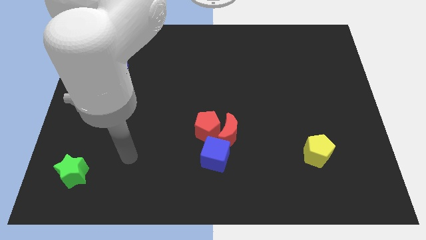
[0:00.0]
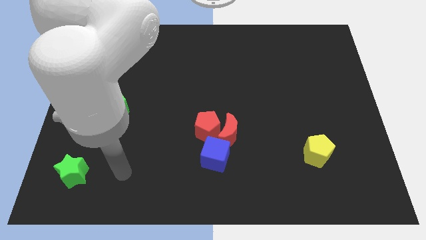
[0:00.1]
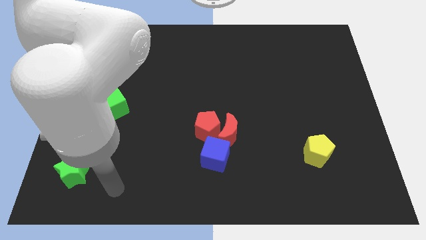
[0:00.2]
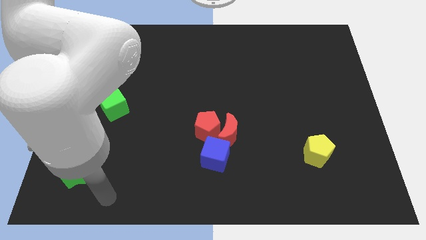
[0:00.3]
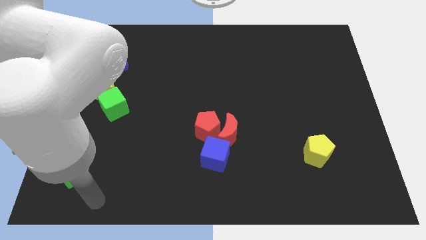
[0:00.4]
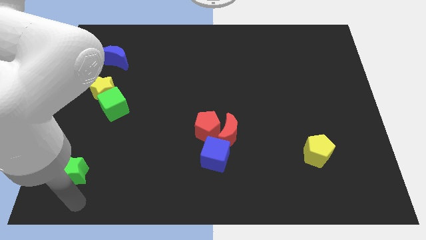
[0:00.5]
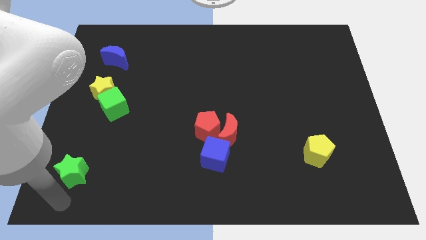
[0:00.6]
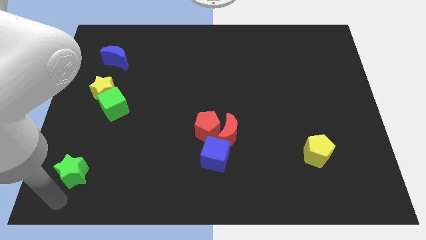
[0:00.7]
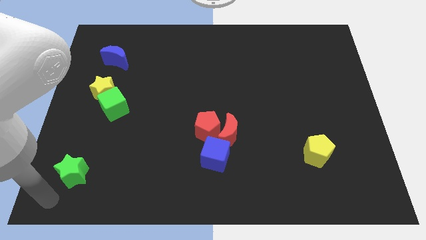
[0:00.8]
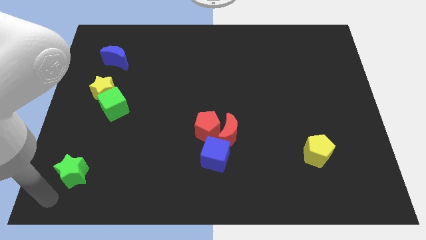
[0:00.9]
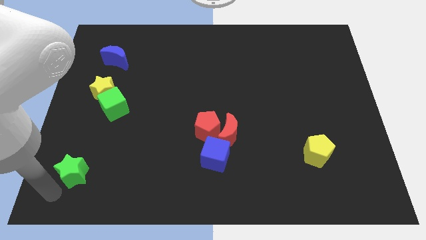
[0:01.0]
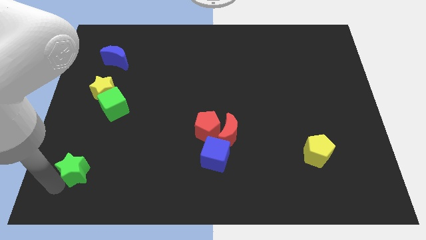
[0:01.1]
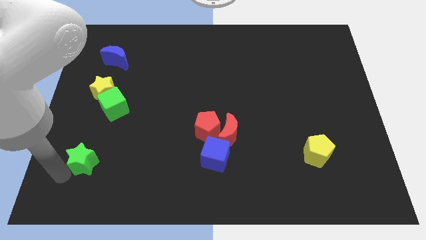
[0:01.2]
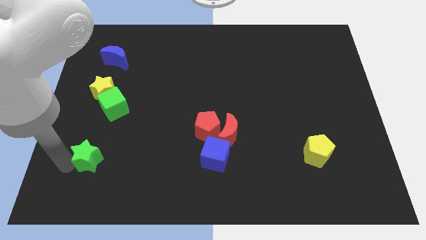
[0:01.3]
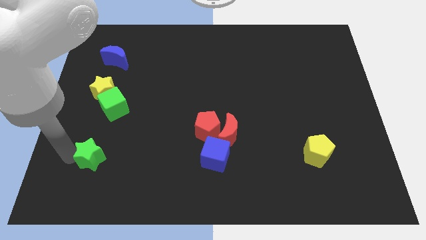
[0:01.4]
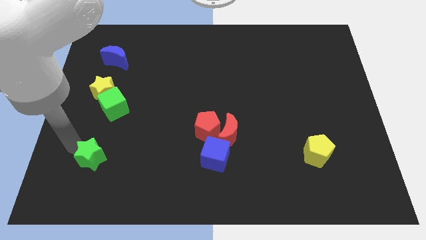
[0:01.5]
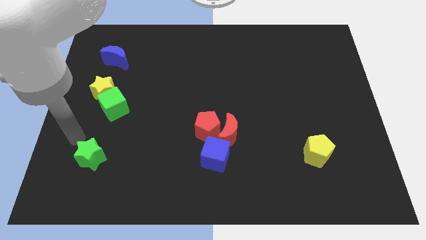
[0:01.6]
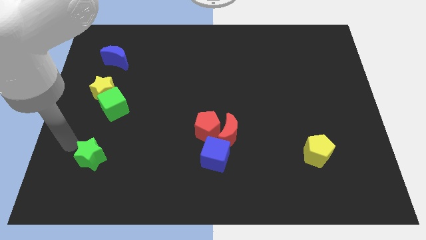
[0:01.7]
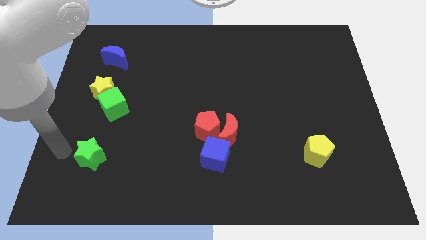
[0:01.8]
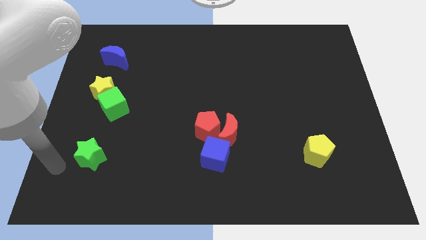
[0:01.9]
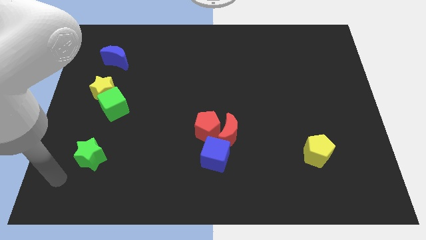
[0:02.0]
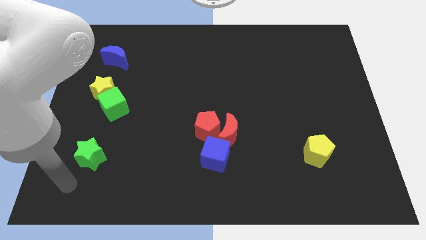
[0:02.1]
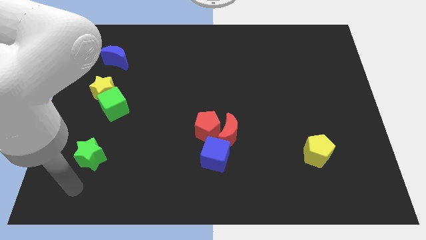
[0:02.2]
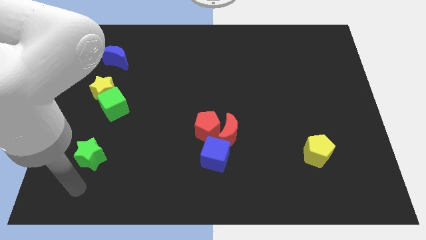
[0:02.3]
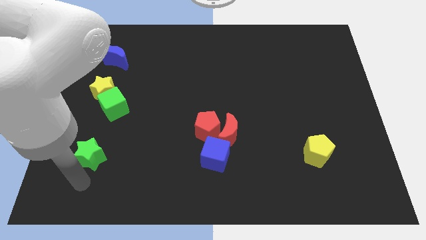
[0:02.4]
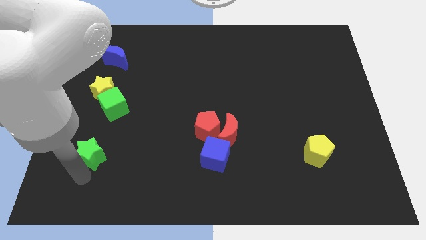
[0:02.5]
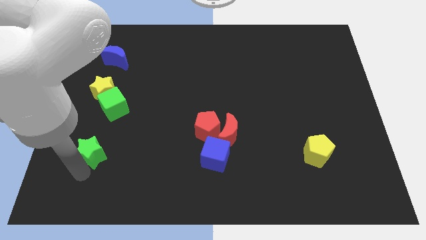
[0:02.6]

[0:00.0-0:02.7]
push the green star slightly upwards

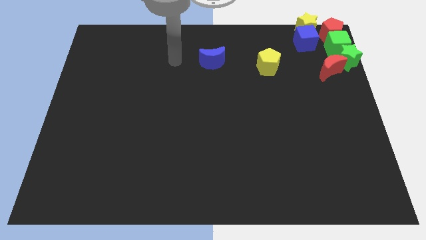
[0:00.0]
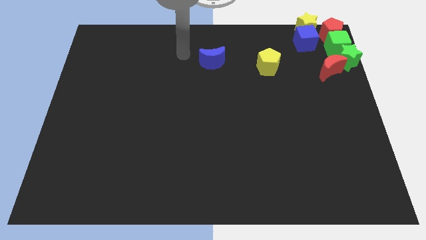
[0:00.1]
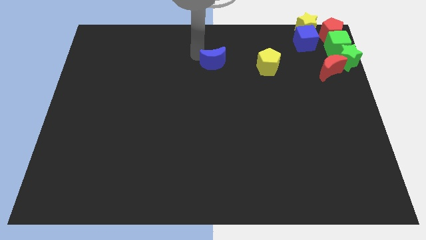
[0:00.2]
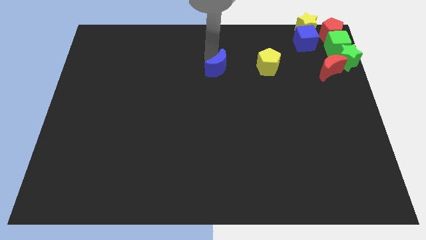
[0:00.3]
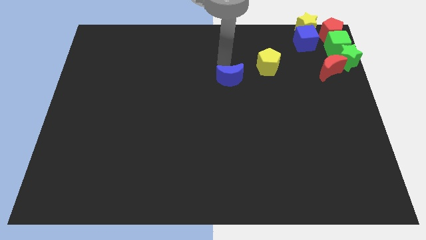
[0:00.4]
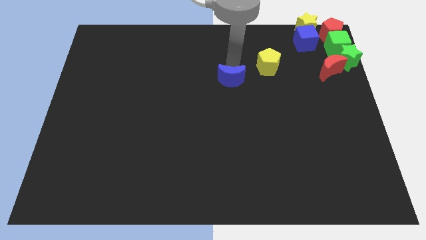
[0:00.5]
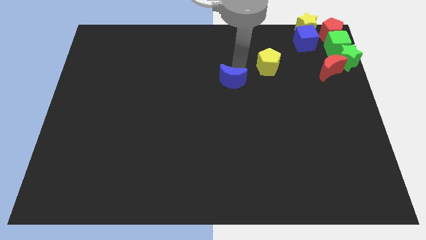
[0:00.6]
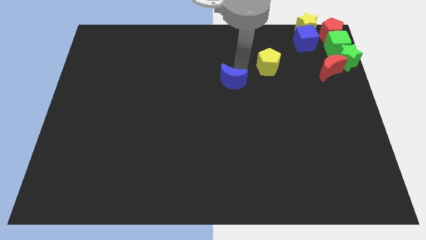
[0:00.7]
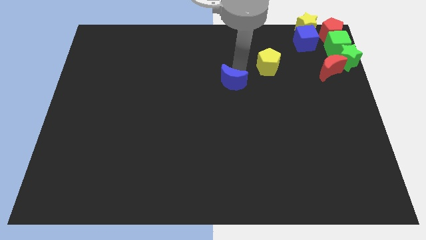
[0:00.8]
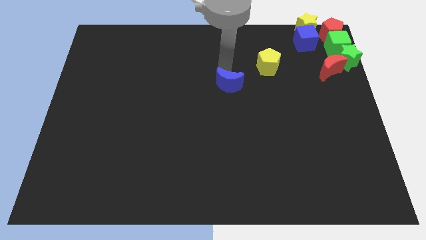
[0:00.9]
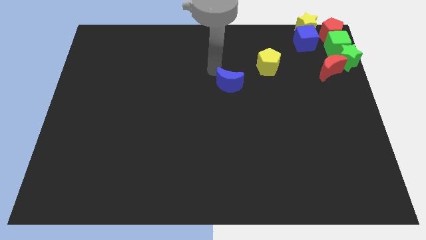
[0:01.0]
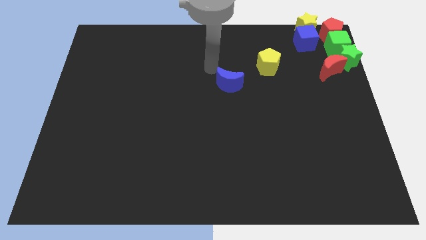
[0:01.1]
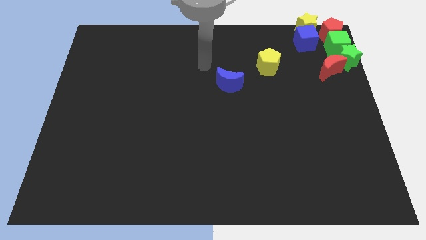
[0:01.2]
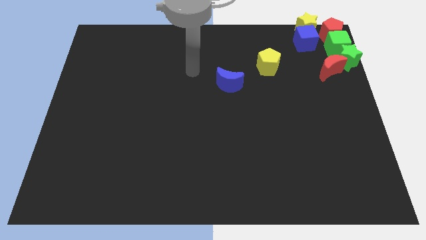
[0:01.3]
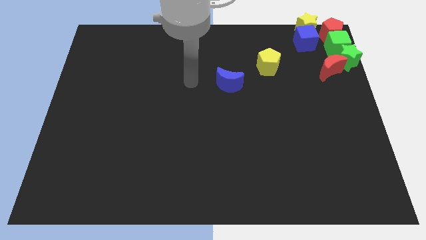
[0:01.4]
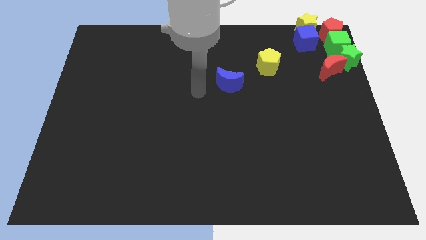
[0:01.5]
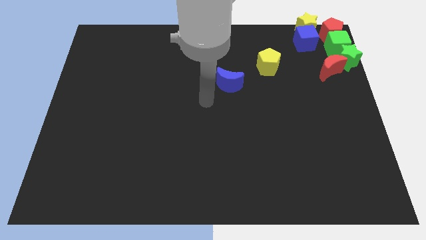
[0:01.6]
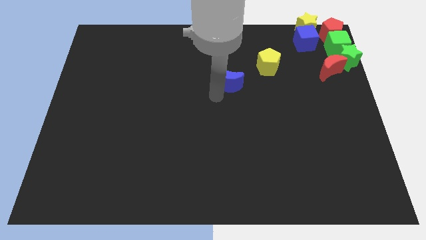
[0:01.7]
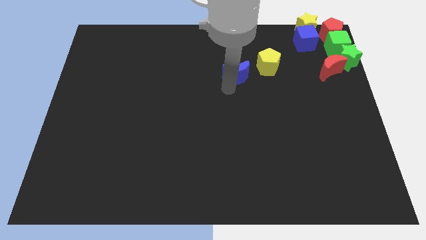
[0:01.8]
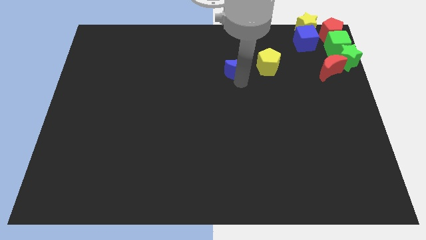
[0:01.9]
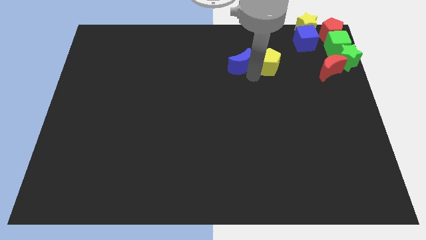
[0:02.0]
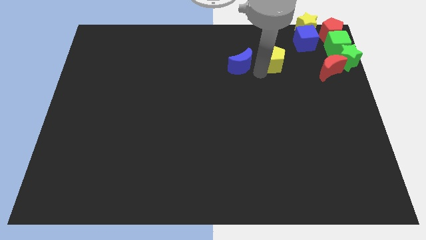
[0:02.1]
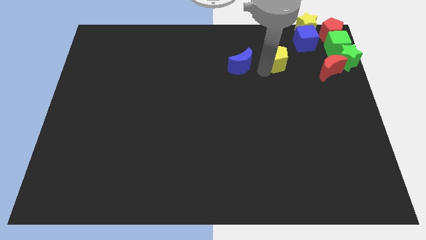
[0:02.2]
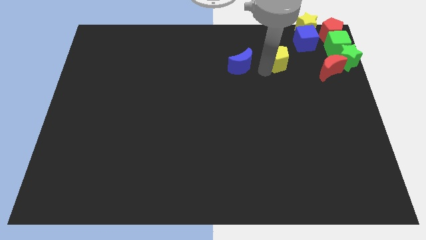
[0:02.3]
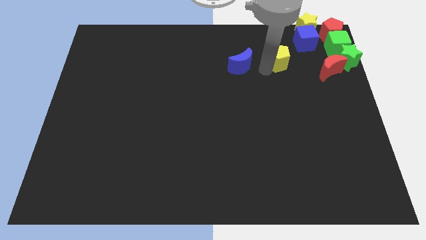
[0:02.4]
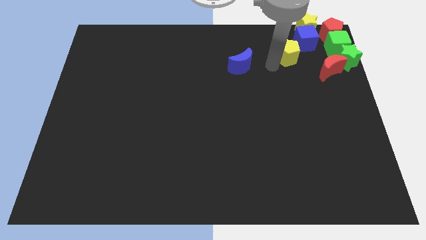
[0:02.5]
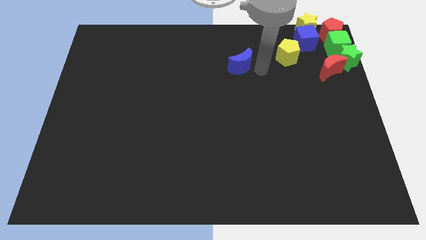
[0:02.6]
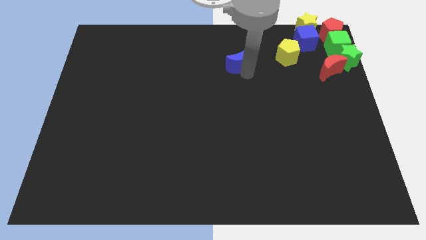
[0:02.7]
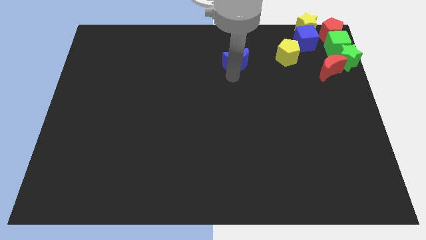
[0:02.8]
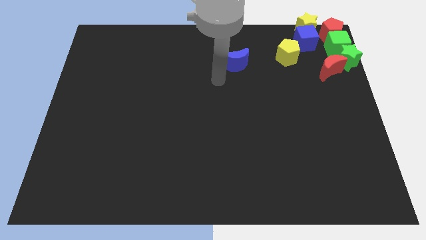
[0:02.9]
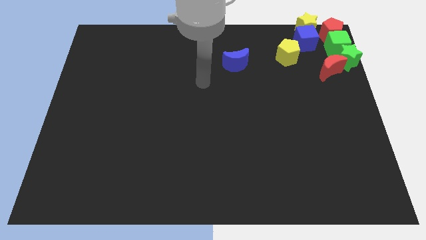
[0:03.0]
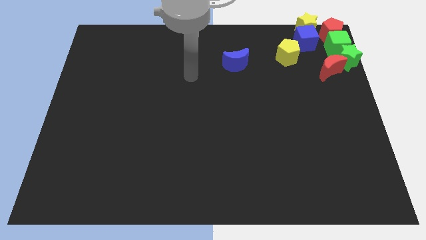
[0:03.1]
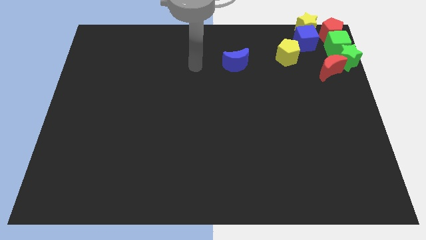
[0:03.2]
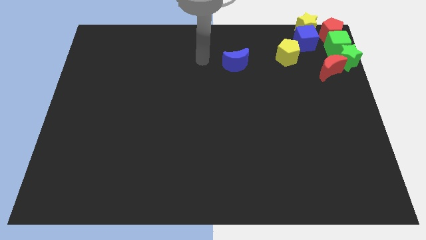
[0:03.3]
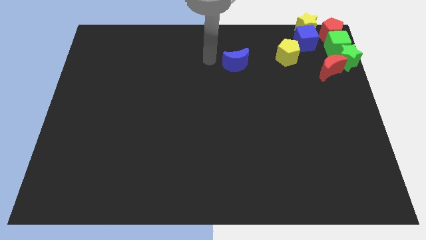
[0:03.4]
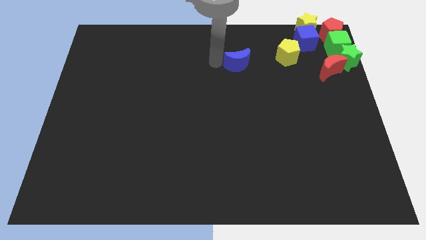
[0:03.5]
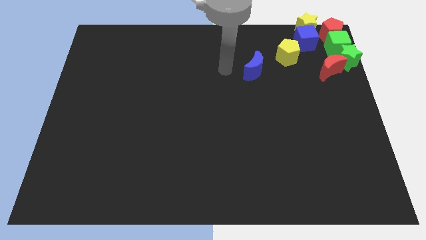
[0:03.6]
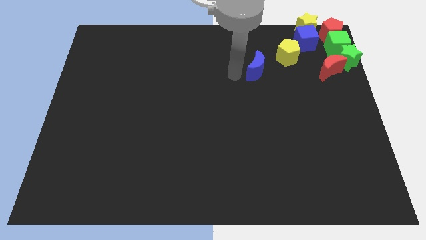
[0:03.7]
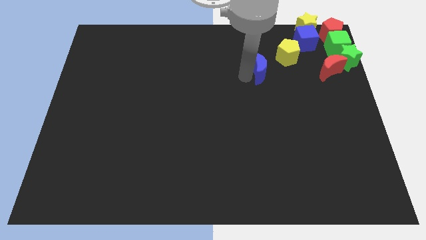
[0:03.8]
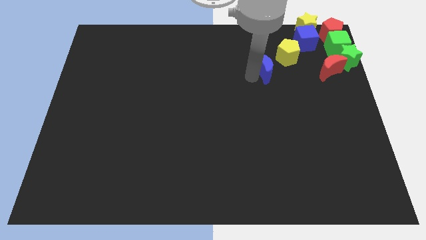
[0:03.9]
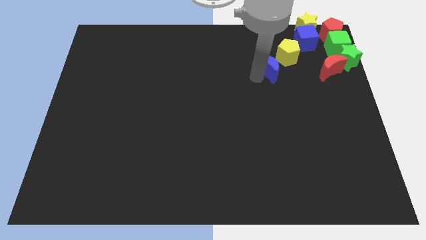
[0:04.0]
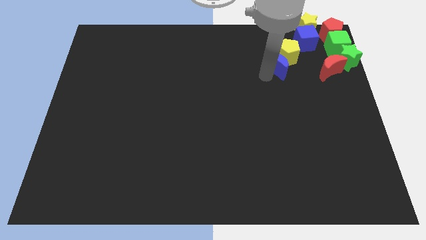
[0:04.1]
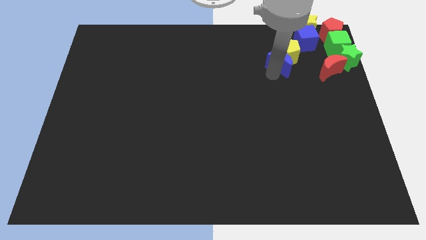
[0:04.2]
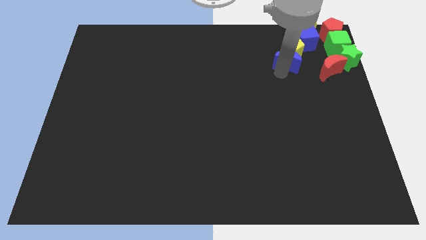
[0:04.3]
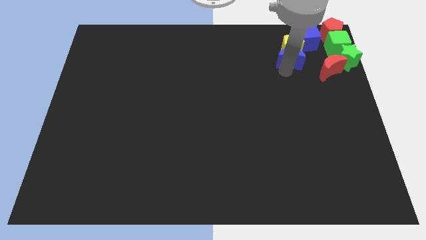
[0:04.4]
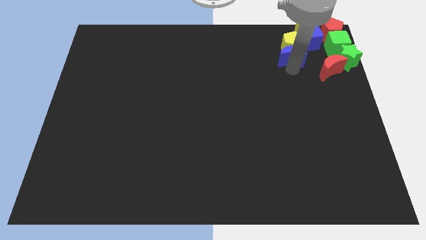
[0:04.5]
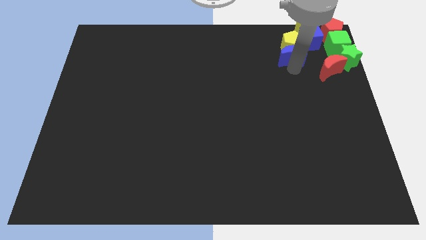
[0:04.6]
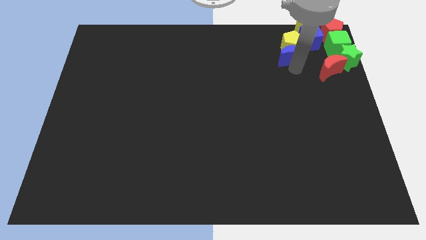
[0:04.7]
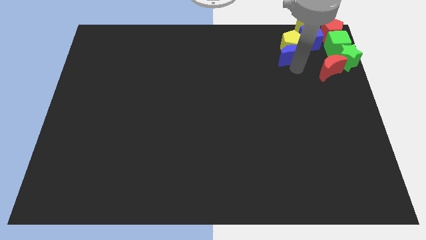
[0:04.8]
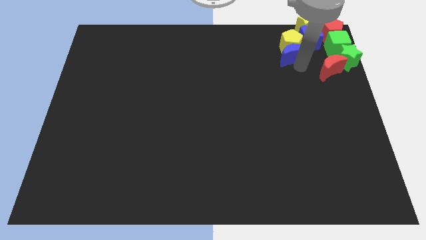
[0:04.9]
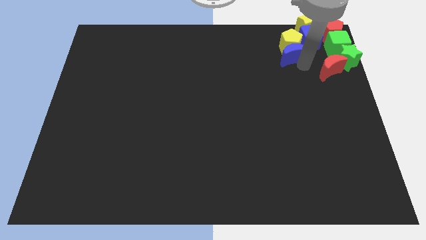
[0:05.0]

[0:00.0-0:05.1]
push the blue crescent with yellow pentagon to the top right

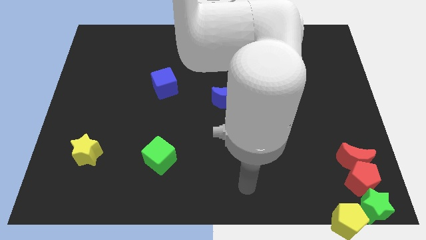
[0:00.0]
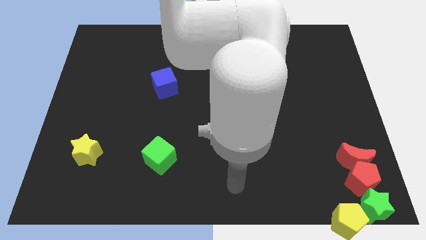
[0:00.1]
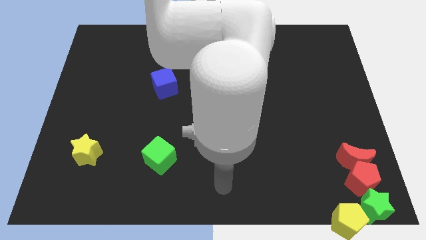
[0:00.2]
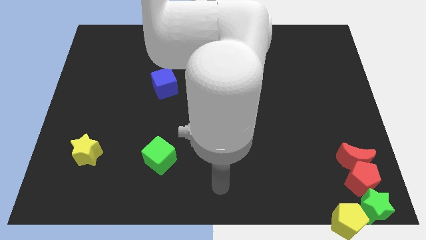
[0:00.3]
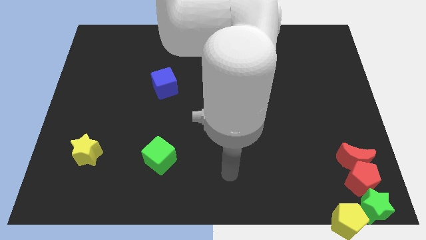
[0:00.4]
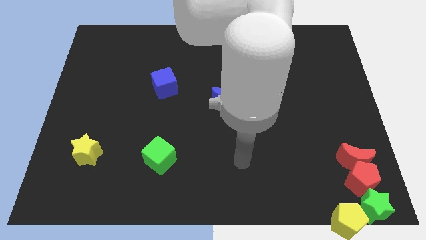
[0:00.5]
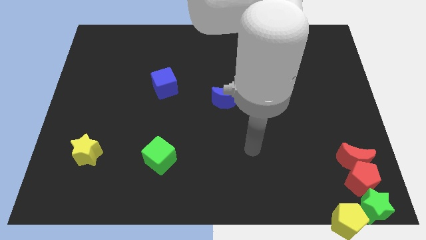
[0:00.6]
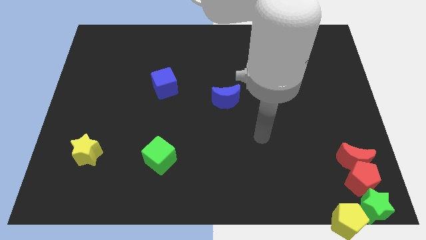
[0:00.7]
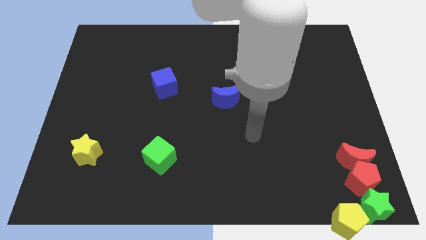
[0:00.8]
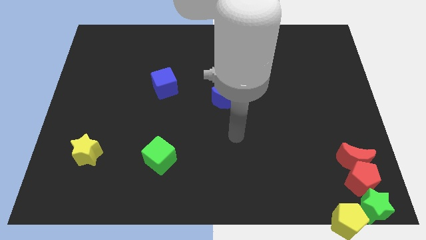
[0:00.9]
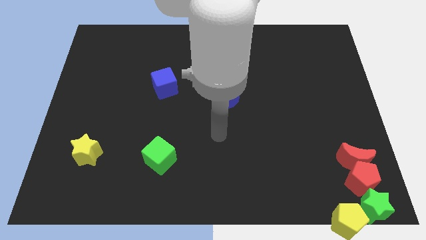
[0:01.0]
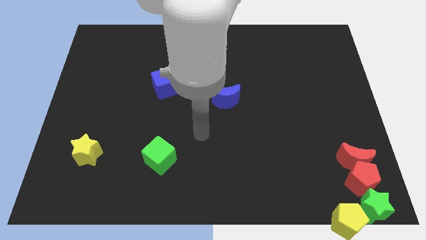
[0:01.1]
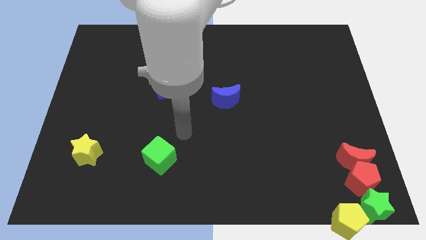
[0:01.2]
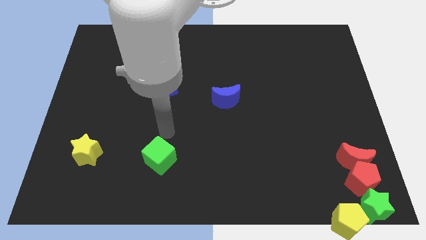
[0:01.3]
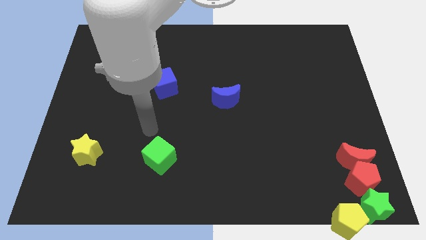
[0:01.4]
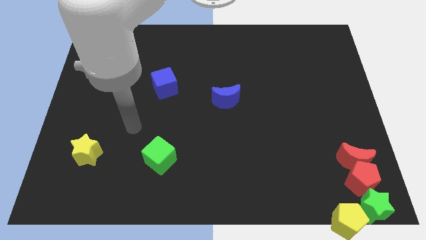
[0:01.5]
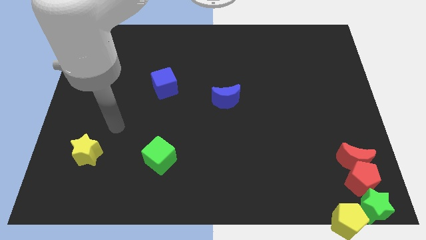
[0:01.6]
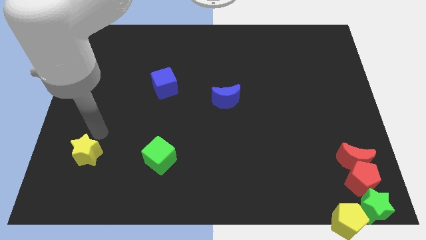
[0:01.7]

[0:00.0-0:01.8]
move your arm towards yellow star
